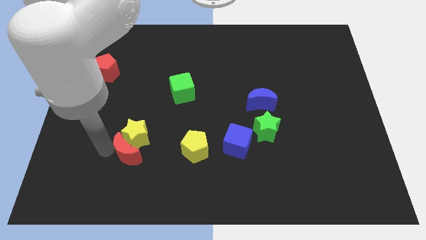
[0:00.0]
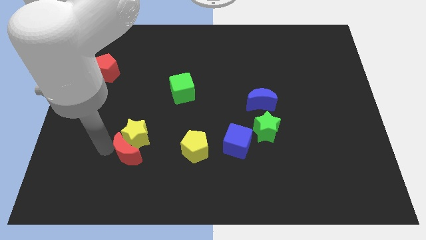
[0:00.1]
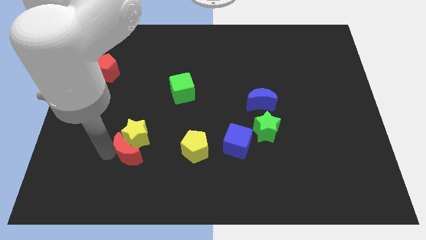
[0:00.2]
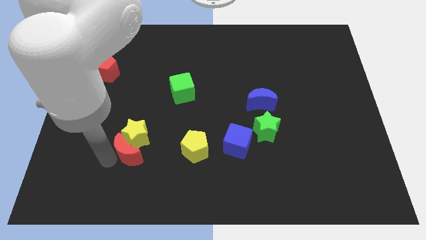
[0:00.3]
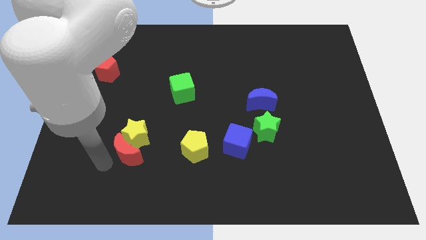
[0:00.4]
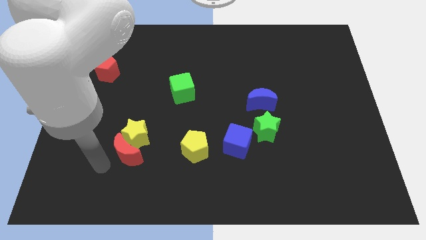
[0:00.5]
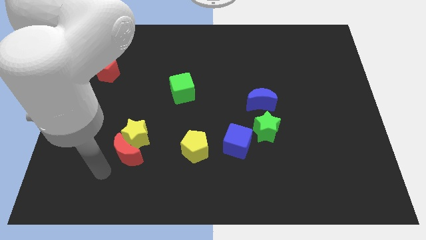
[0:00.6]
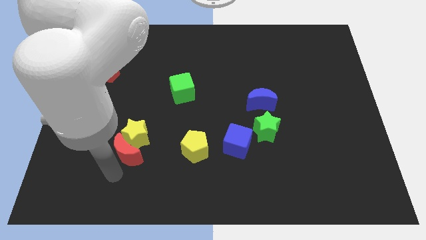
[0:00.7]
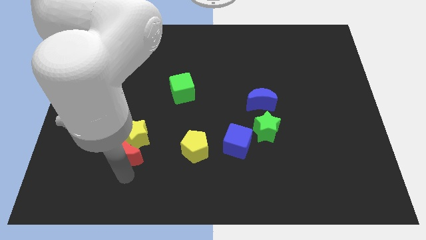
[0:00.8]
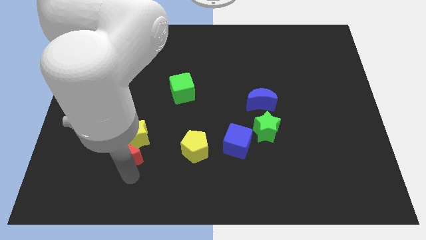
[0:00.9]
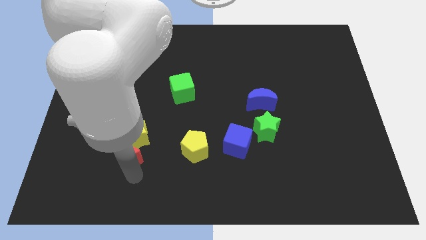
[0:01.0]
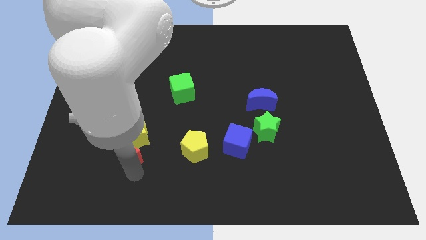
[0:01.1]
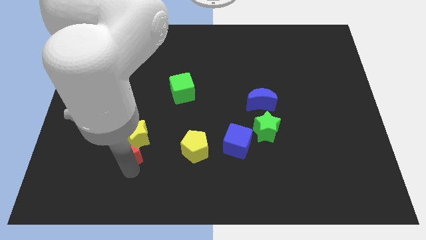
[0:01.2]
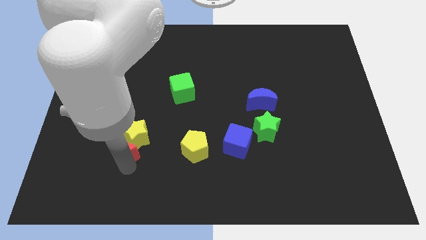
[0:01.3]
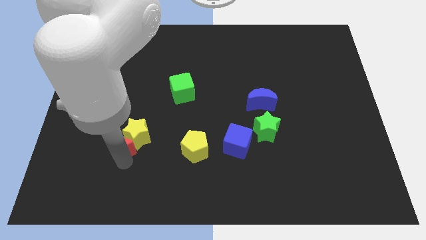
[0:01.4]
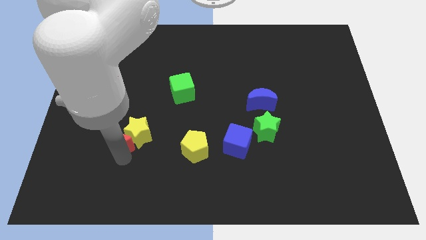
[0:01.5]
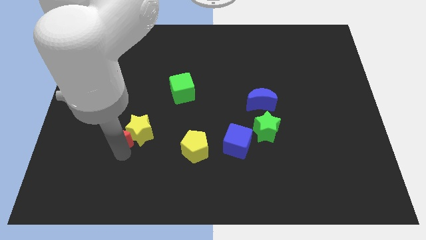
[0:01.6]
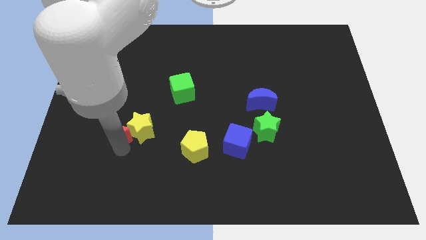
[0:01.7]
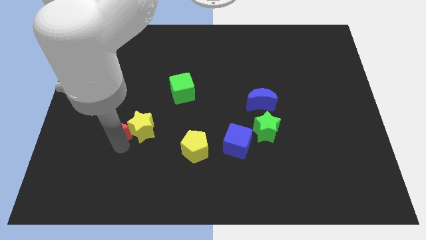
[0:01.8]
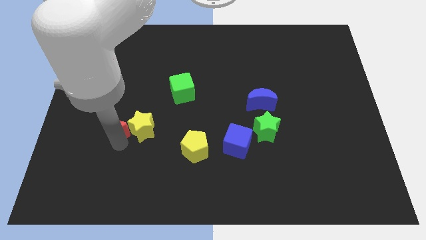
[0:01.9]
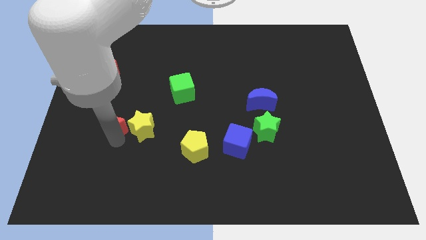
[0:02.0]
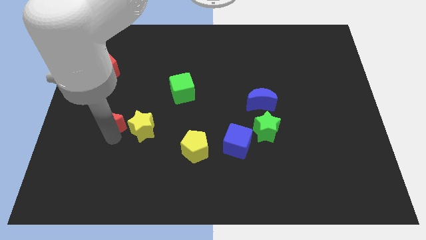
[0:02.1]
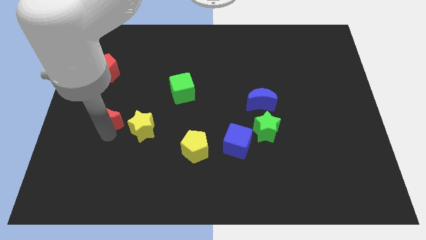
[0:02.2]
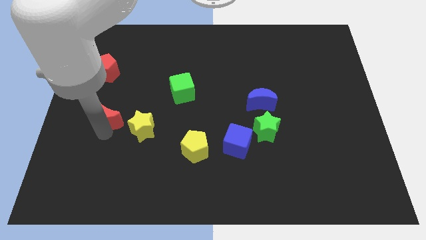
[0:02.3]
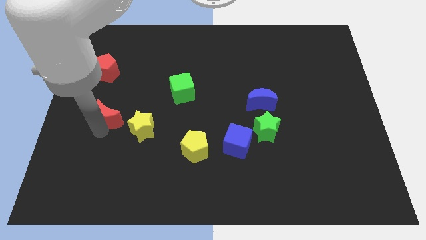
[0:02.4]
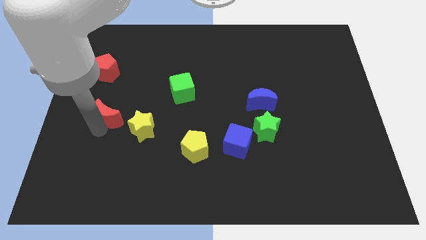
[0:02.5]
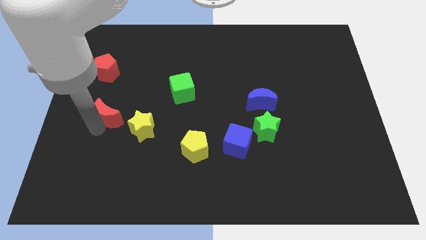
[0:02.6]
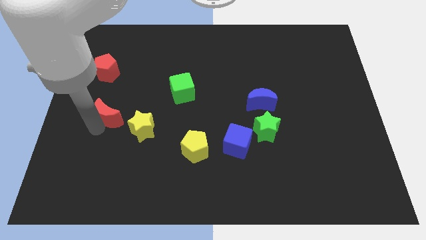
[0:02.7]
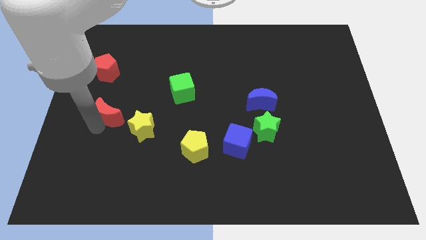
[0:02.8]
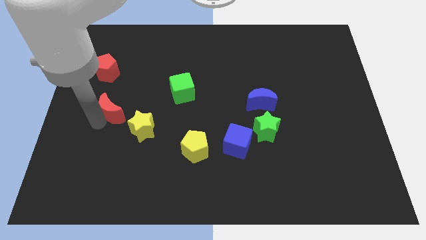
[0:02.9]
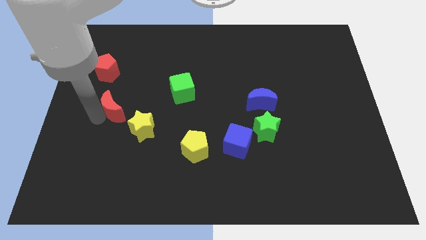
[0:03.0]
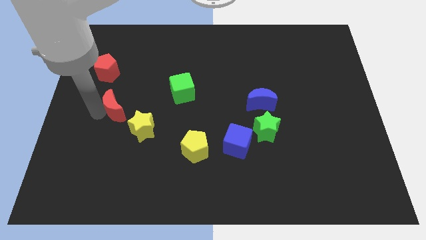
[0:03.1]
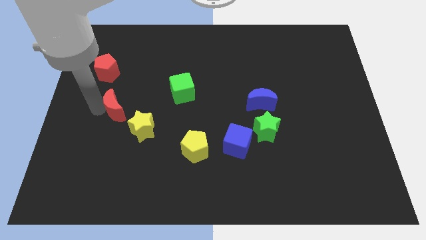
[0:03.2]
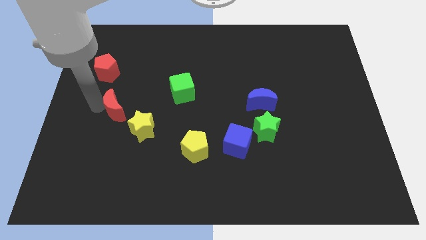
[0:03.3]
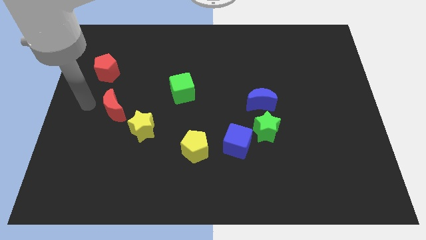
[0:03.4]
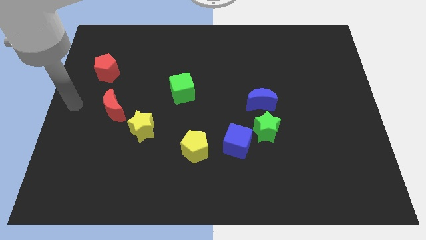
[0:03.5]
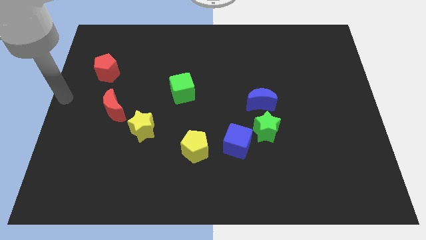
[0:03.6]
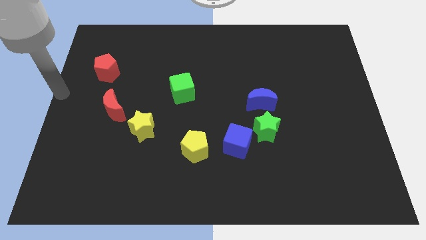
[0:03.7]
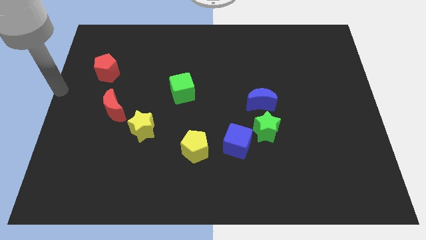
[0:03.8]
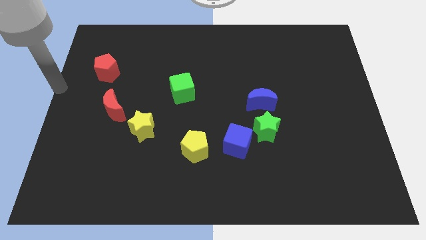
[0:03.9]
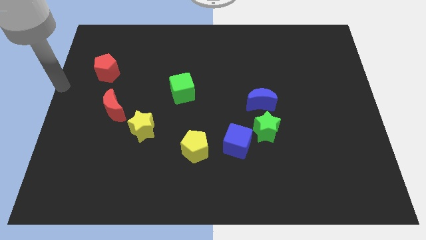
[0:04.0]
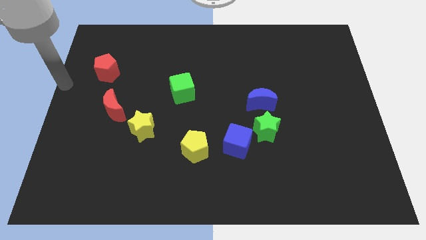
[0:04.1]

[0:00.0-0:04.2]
separate red moon from yellow star

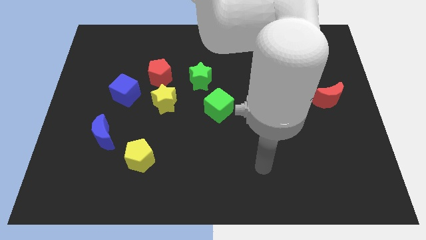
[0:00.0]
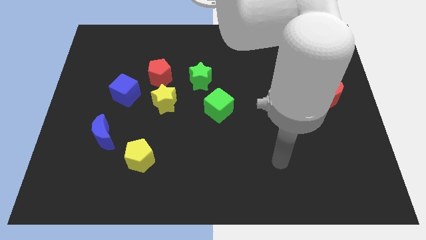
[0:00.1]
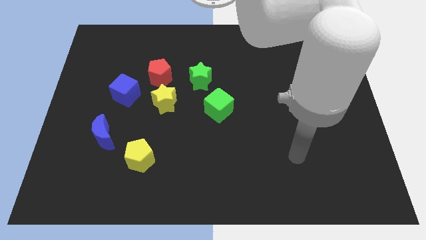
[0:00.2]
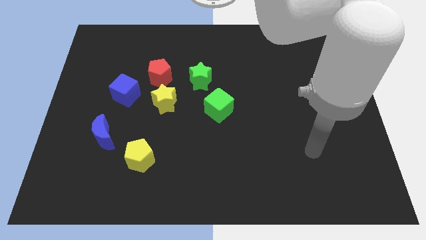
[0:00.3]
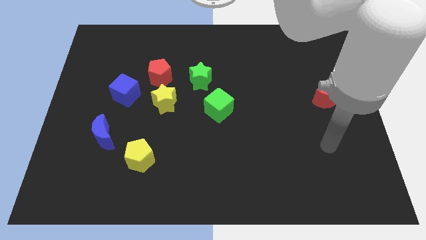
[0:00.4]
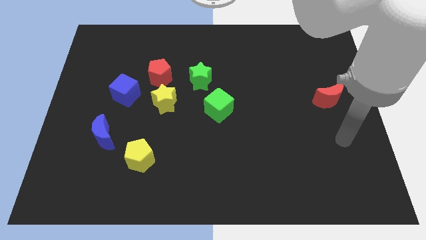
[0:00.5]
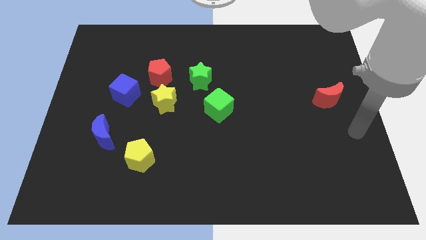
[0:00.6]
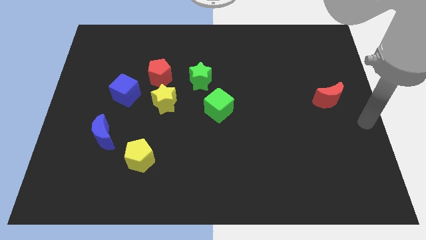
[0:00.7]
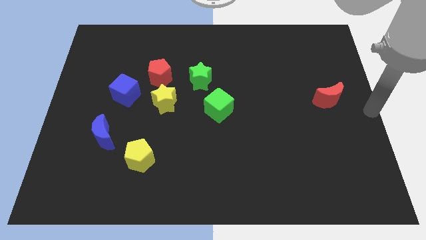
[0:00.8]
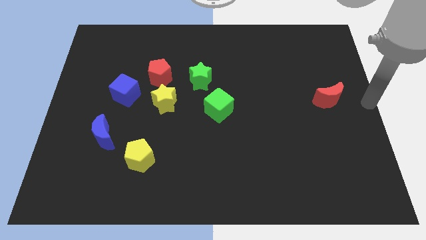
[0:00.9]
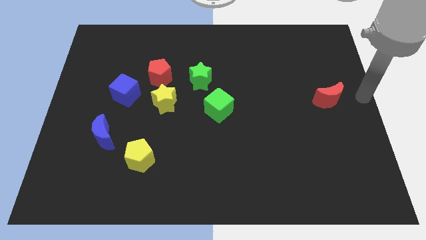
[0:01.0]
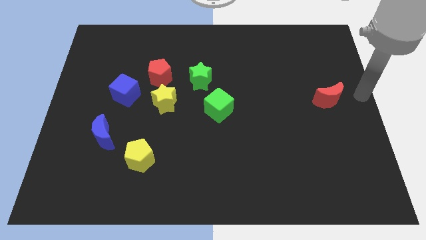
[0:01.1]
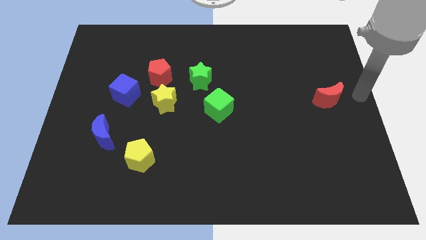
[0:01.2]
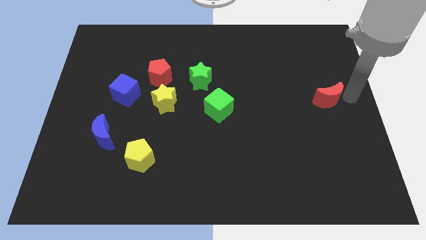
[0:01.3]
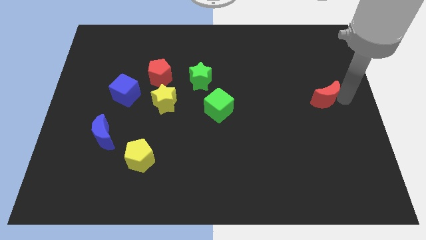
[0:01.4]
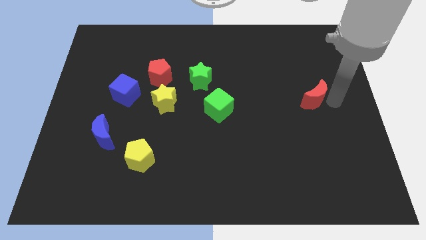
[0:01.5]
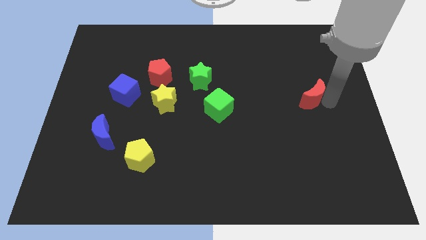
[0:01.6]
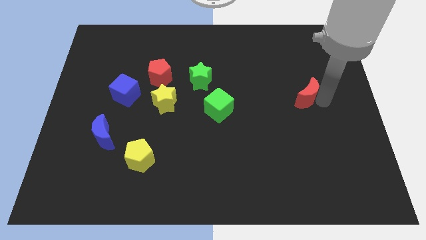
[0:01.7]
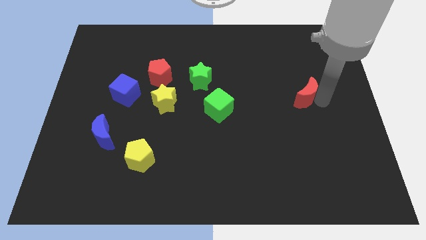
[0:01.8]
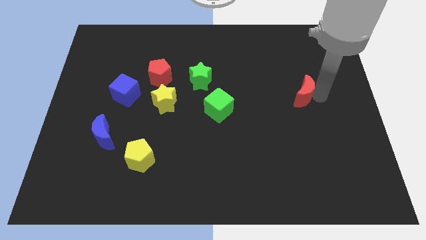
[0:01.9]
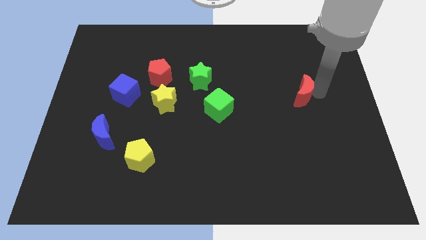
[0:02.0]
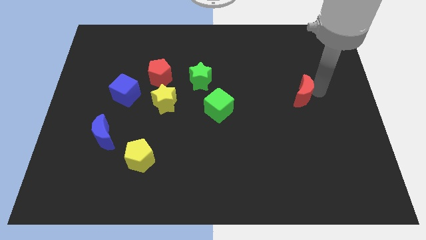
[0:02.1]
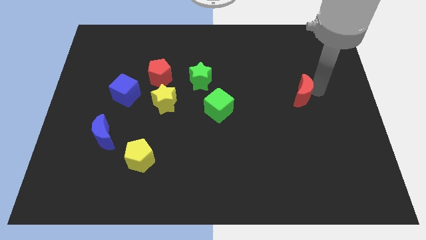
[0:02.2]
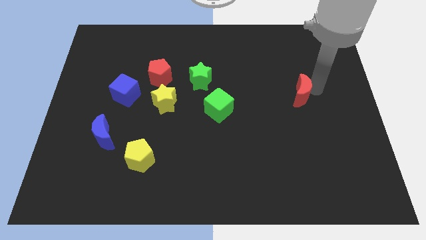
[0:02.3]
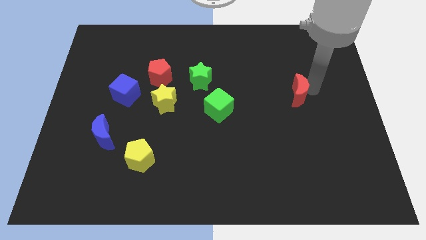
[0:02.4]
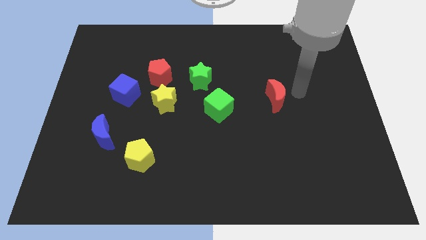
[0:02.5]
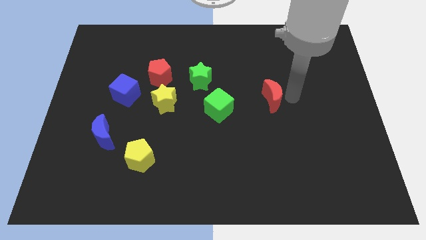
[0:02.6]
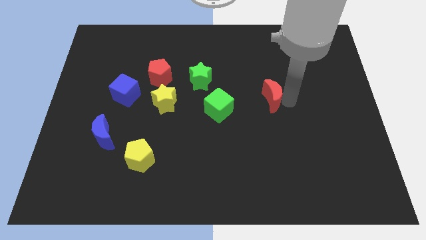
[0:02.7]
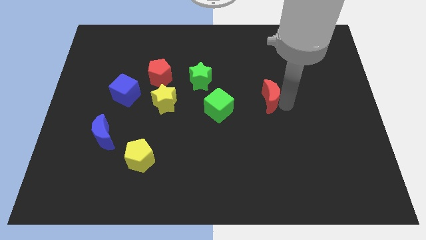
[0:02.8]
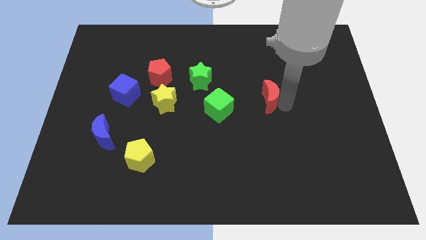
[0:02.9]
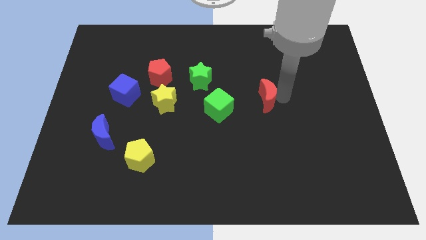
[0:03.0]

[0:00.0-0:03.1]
push red crescent beside green cube

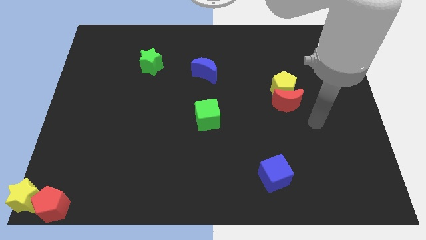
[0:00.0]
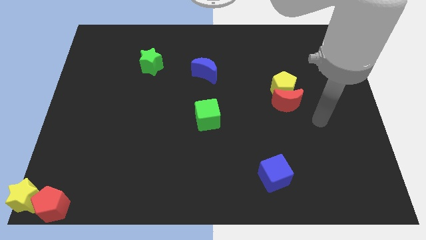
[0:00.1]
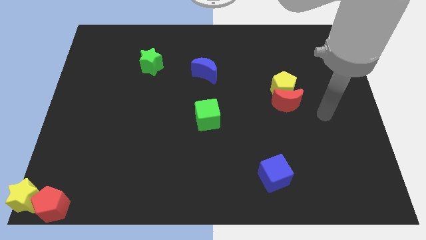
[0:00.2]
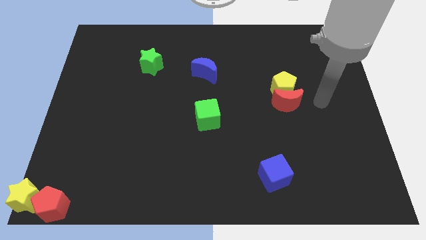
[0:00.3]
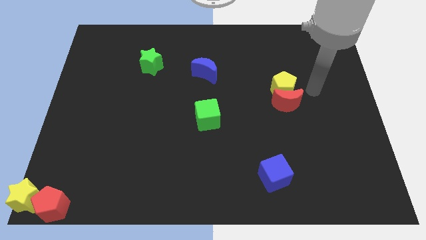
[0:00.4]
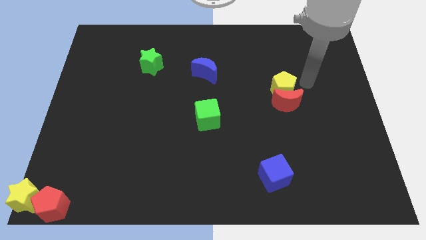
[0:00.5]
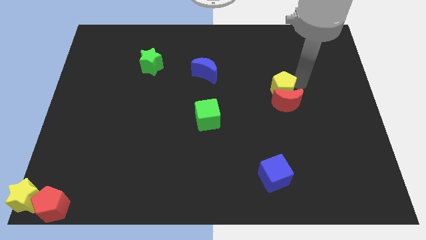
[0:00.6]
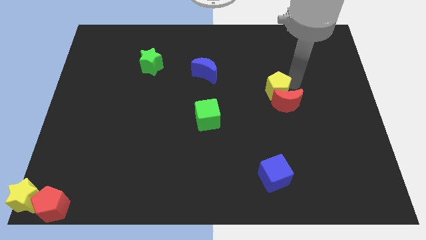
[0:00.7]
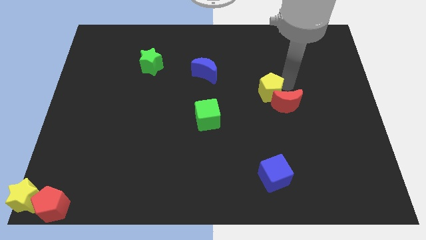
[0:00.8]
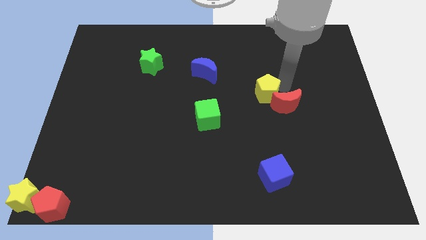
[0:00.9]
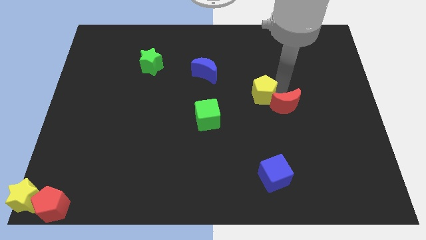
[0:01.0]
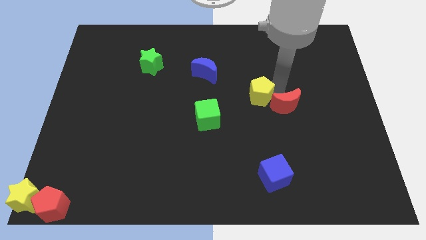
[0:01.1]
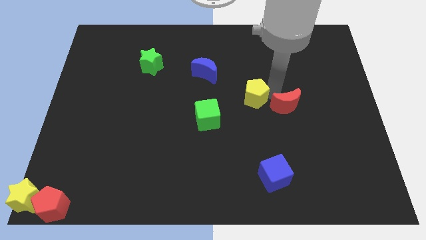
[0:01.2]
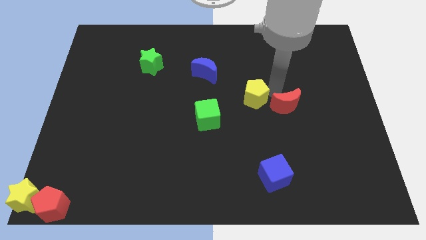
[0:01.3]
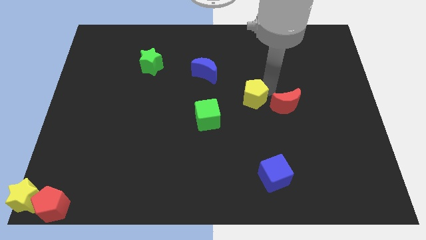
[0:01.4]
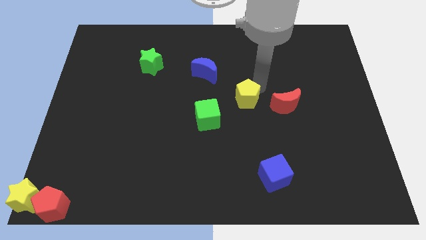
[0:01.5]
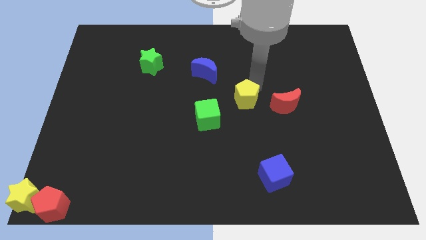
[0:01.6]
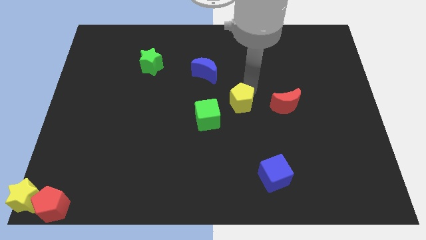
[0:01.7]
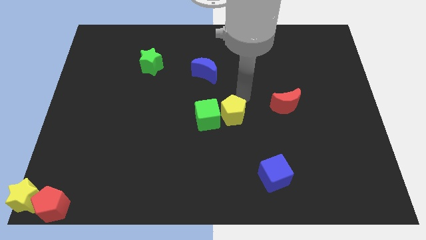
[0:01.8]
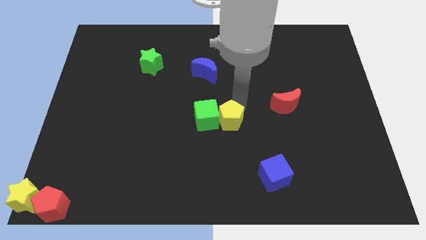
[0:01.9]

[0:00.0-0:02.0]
push the yellow pentagon into the green cube
